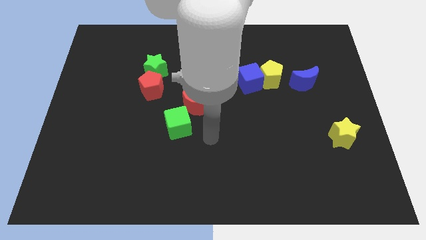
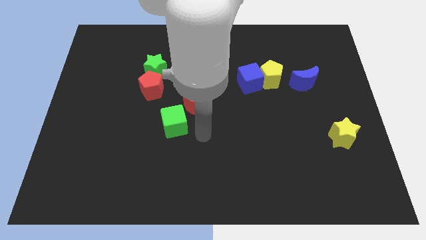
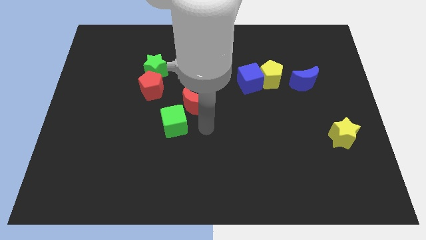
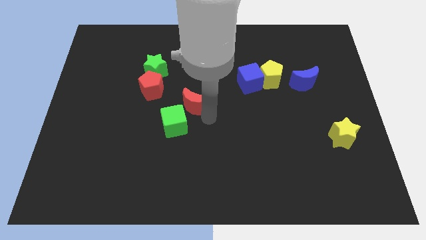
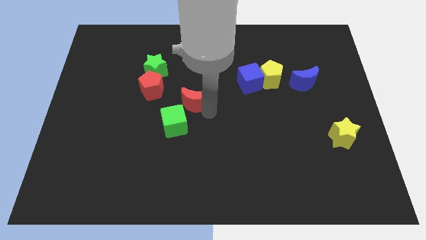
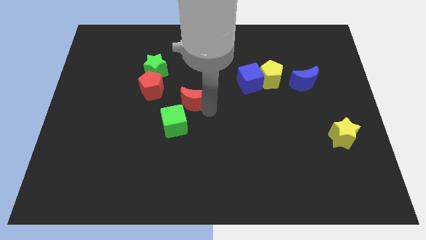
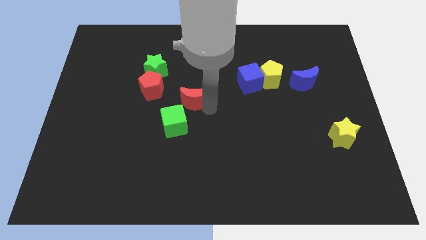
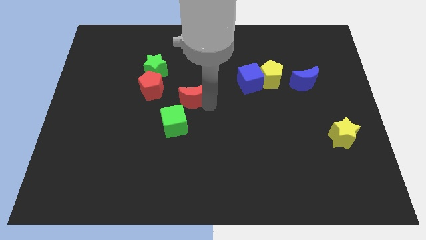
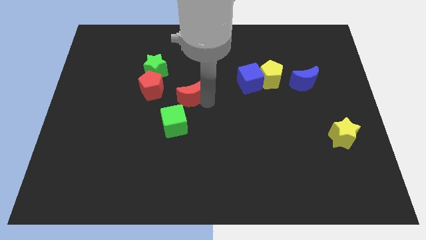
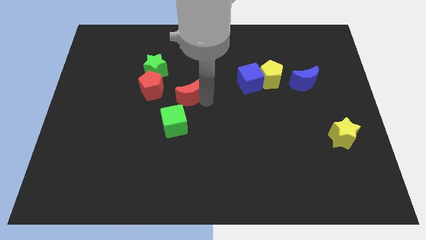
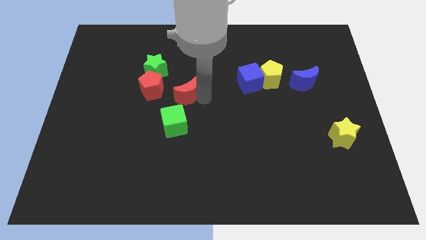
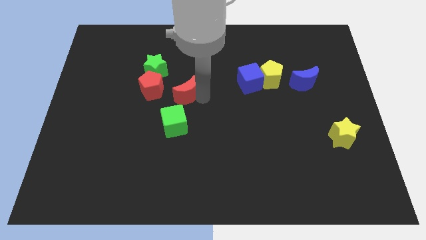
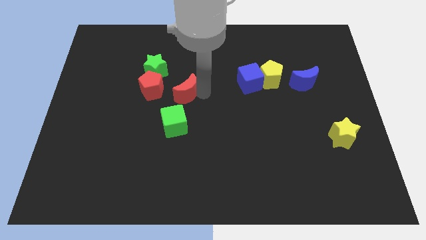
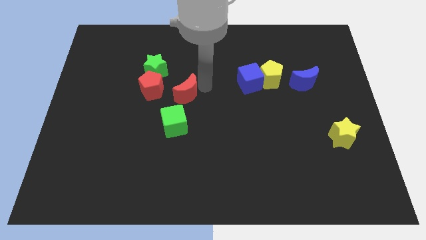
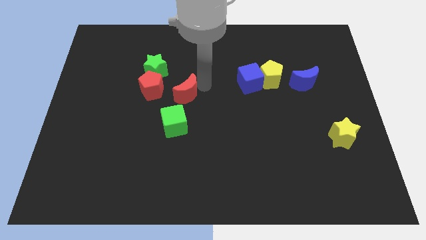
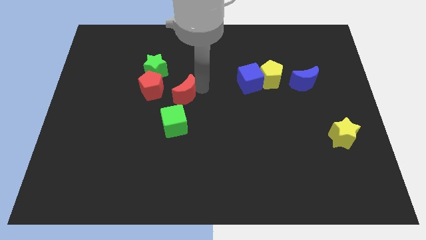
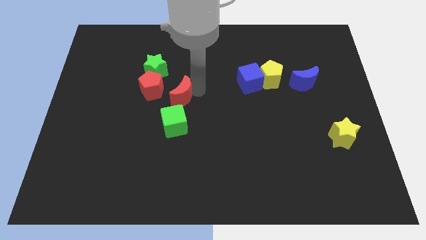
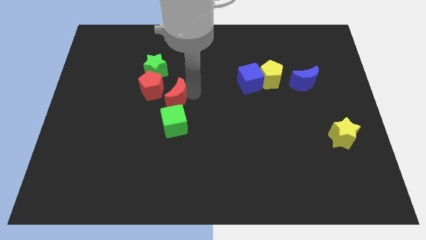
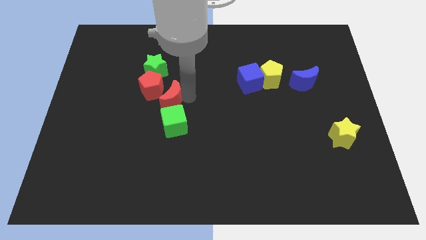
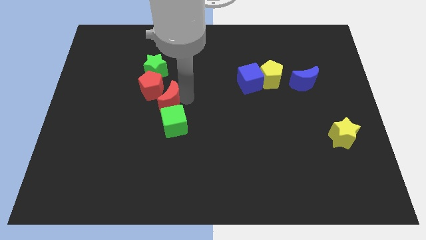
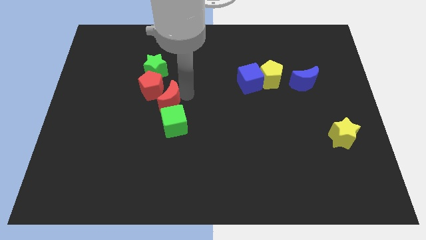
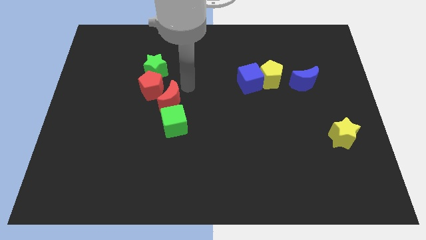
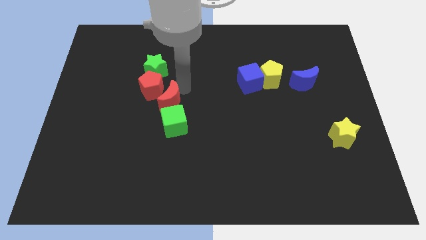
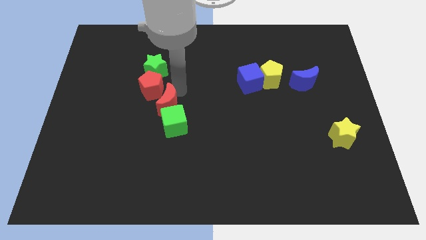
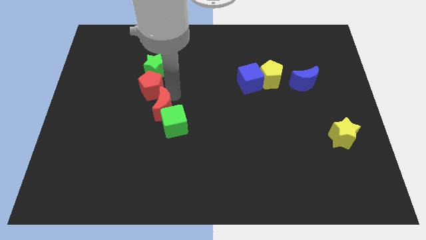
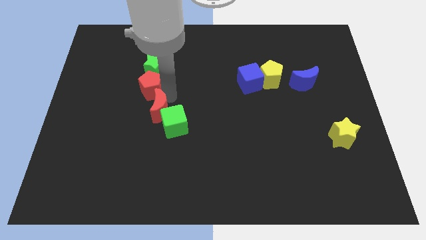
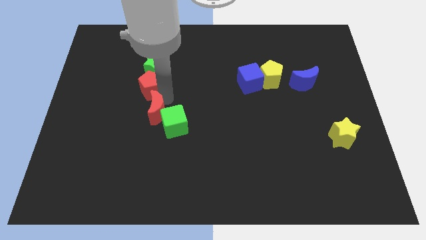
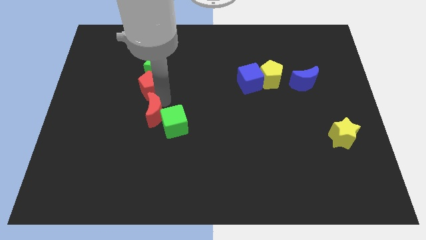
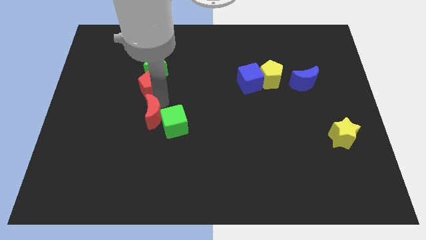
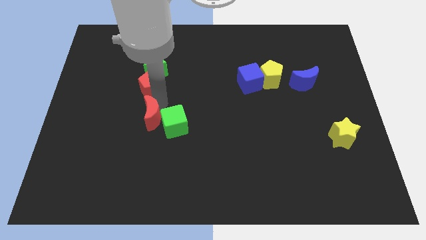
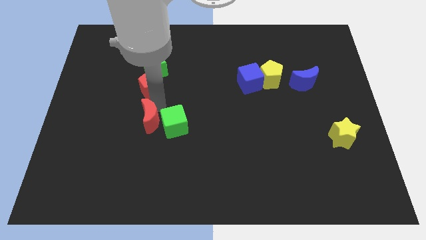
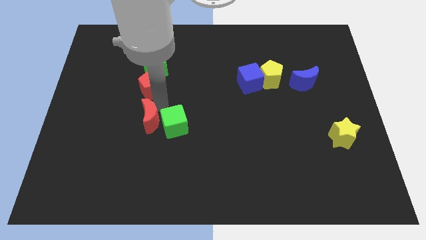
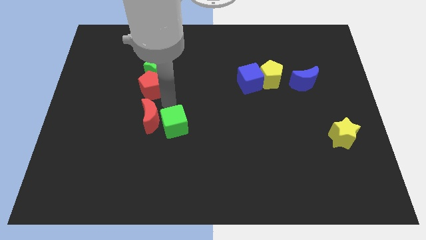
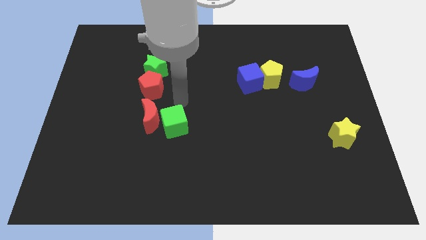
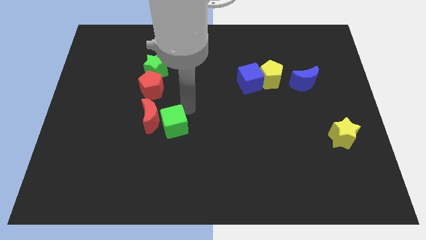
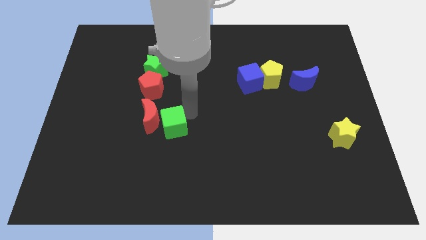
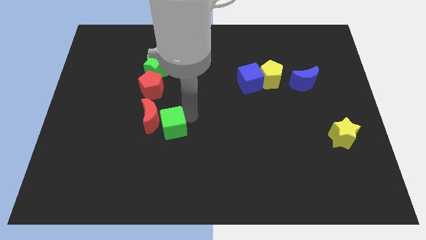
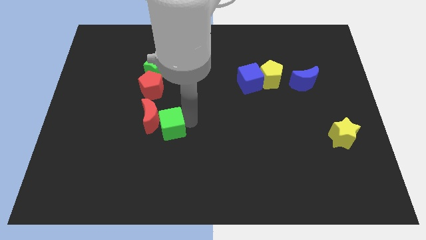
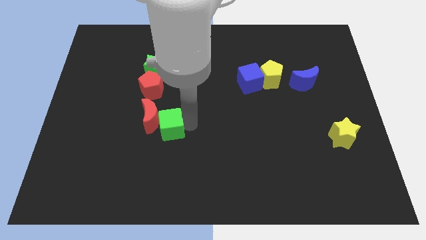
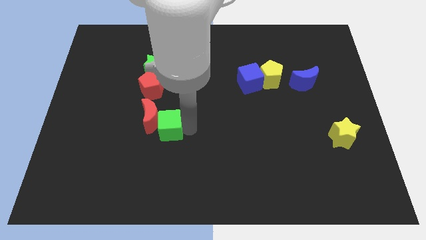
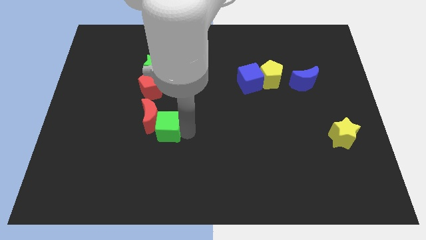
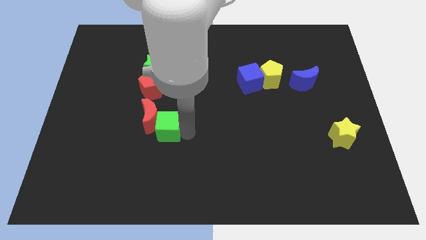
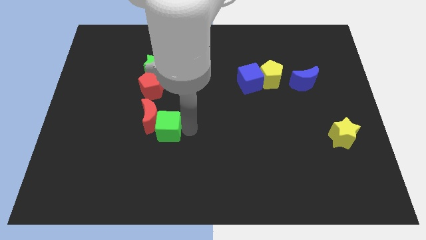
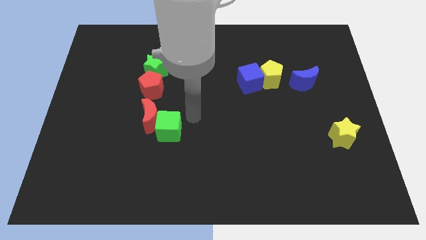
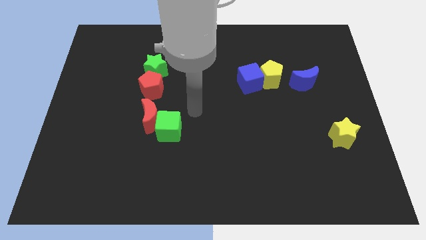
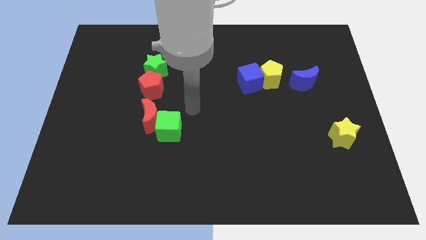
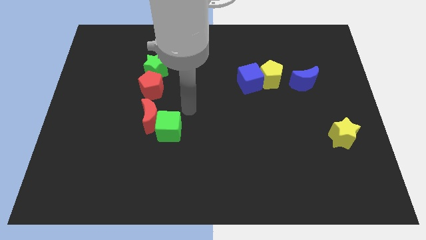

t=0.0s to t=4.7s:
push red moon close to red pentagon

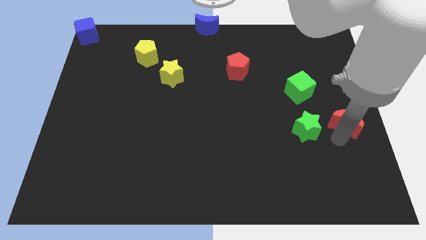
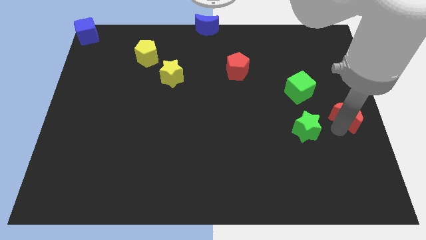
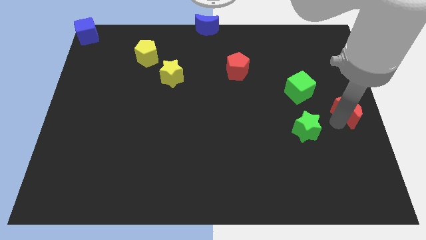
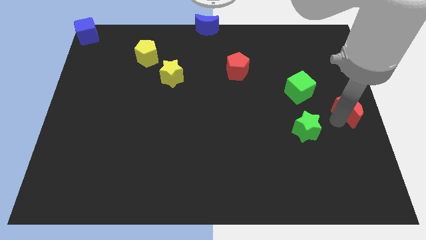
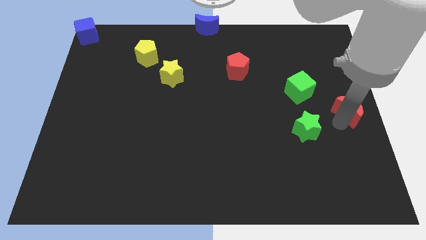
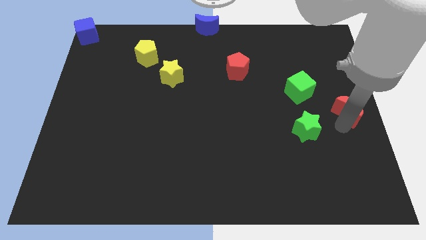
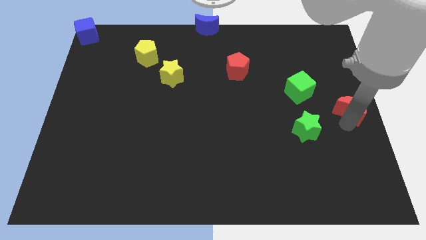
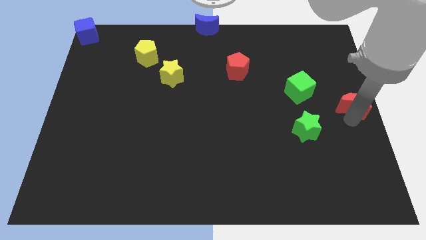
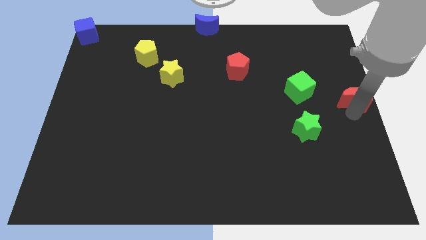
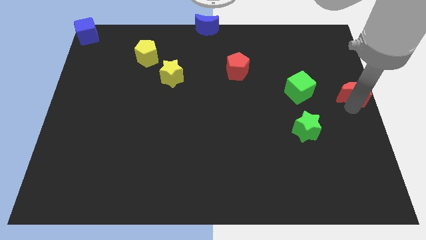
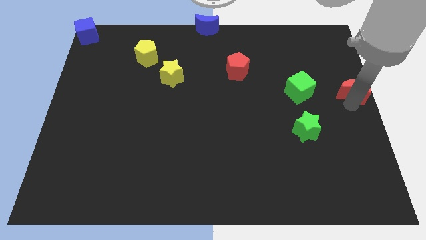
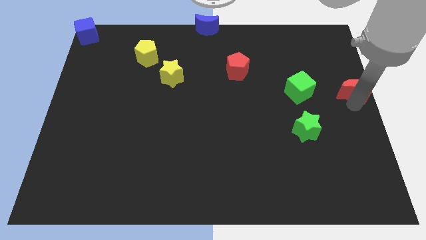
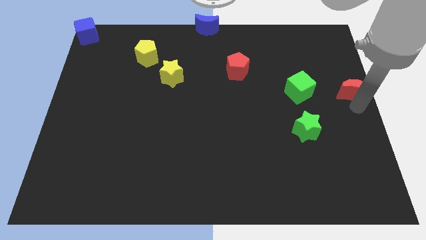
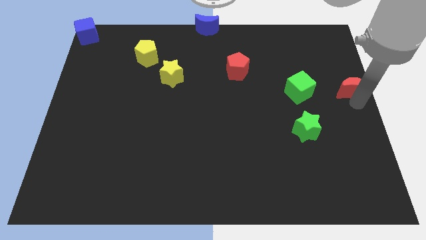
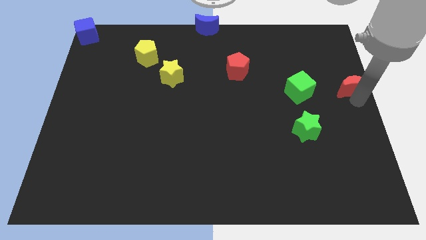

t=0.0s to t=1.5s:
move the red crescent to the right side of the board

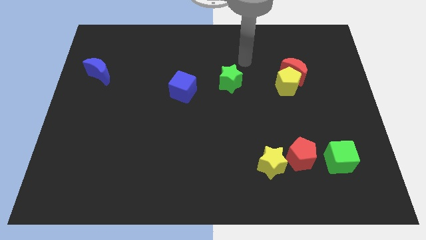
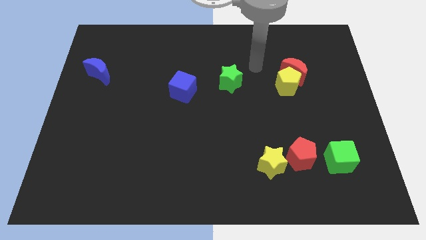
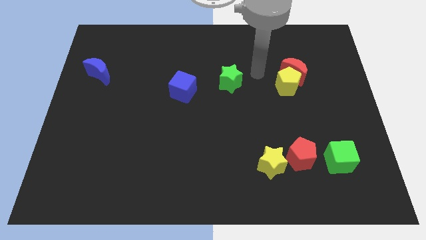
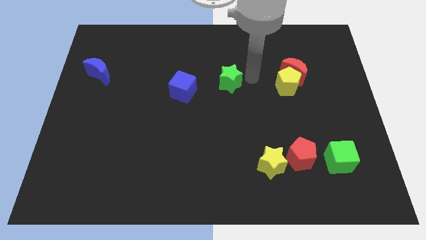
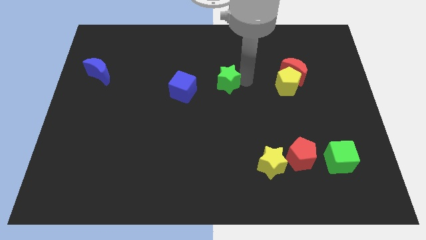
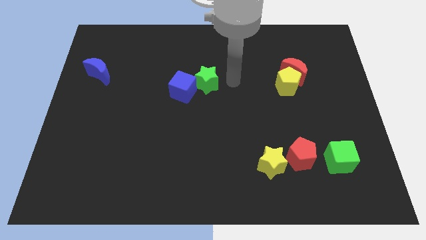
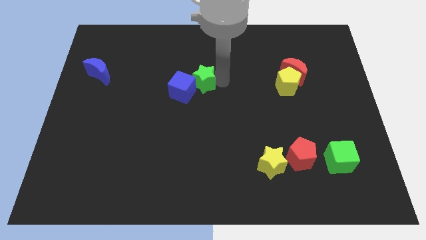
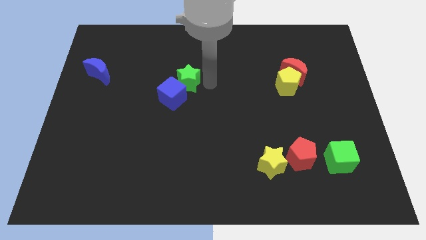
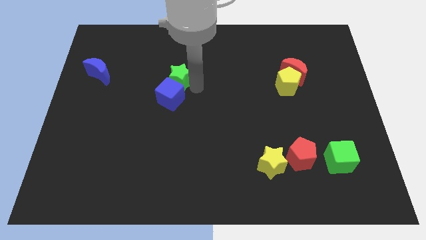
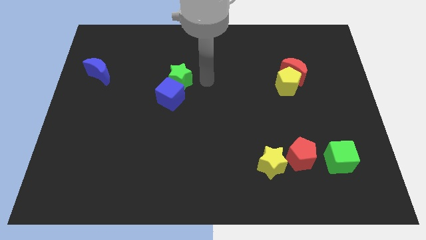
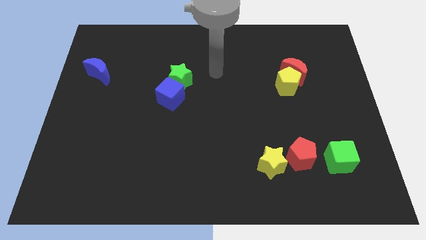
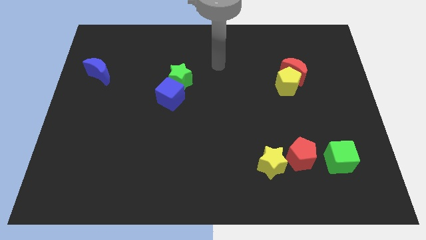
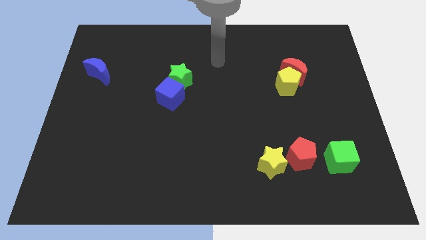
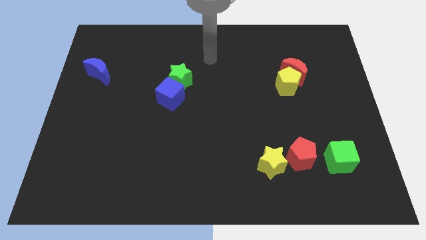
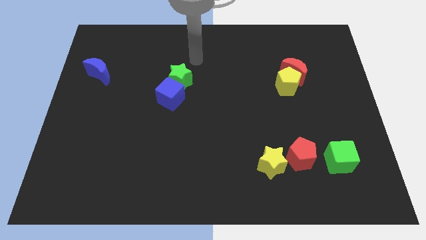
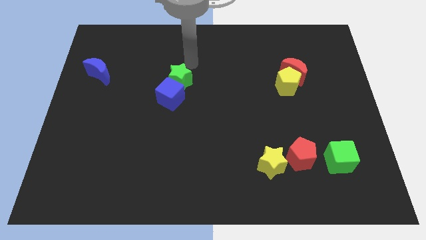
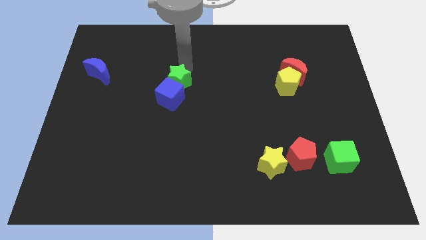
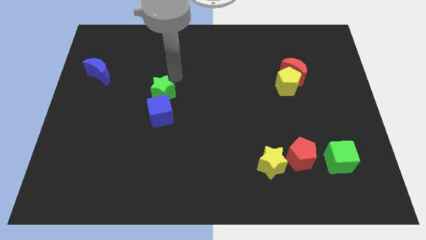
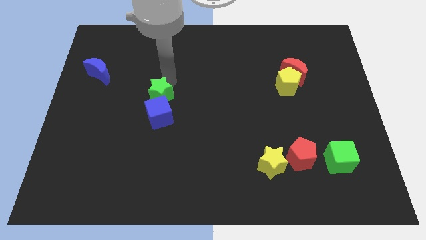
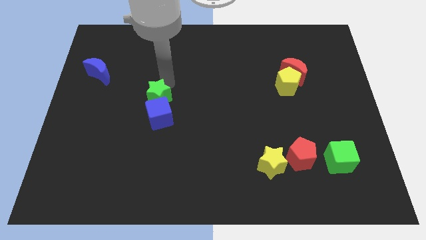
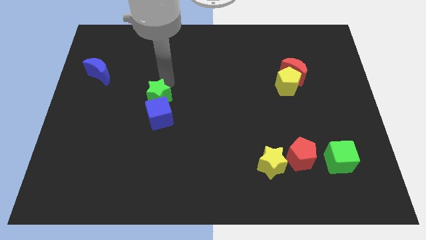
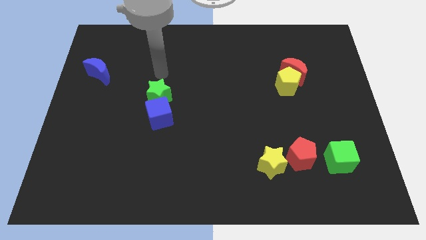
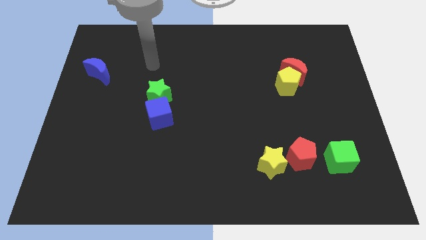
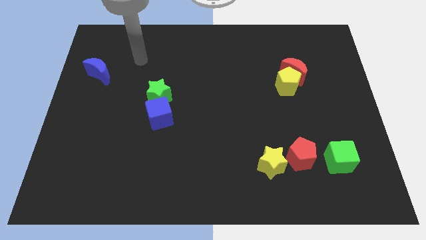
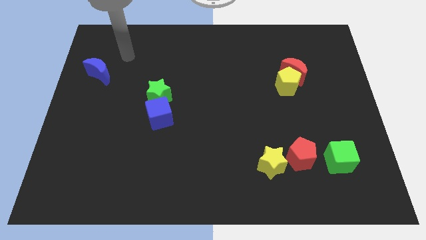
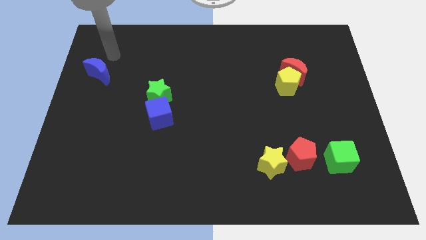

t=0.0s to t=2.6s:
push the green star into the blue cube

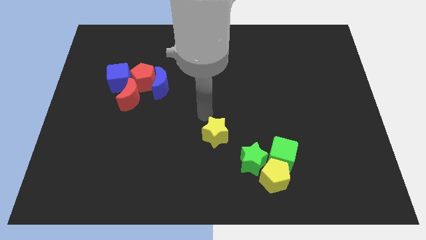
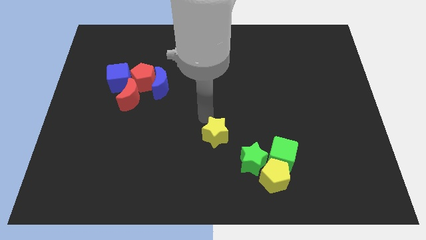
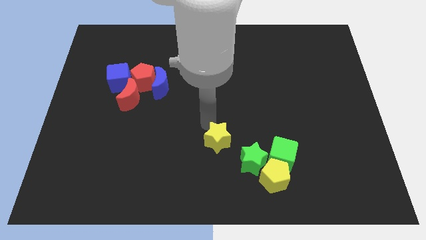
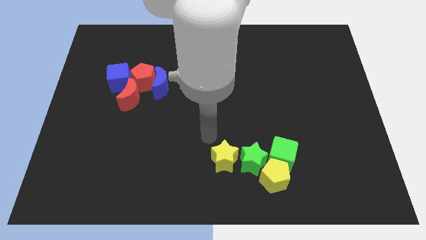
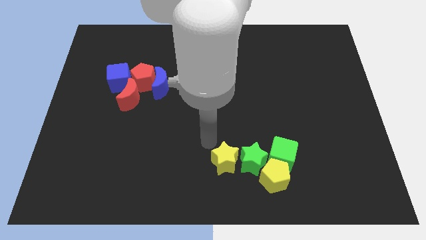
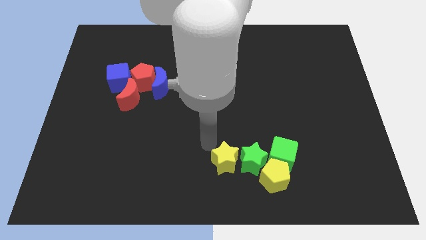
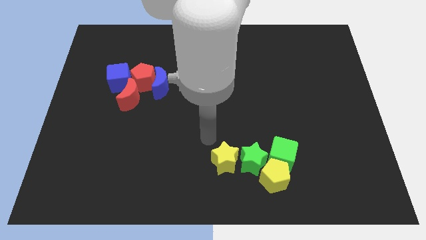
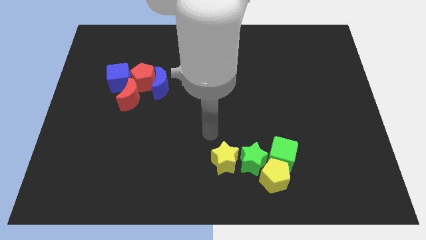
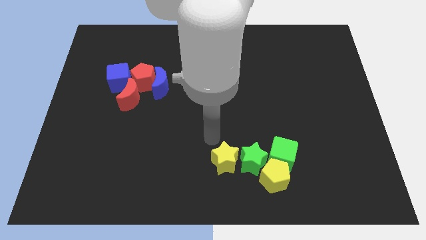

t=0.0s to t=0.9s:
move the yellow star close to the green star
